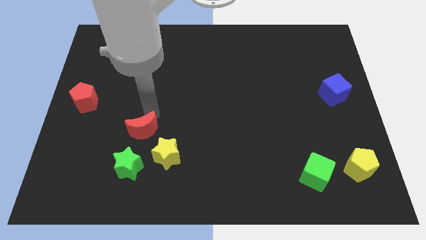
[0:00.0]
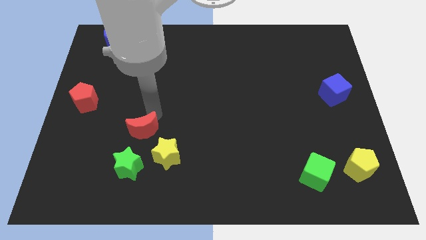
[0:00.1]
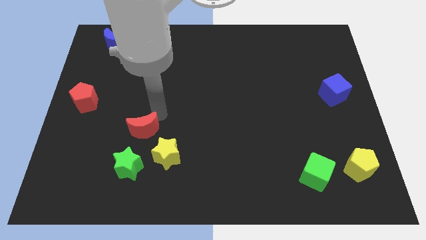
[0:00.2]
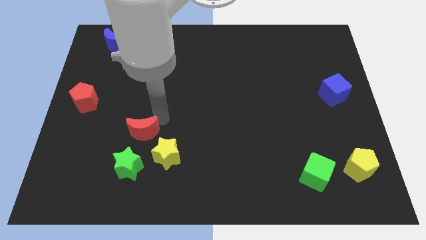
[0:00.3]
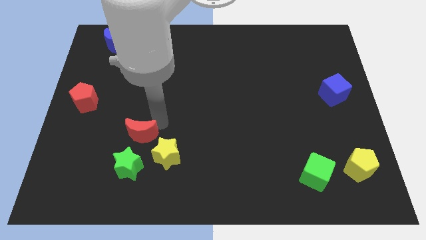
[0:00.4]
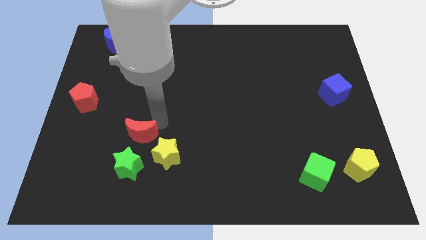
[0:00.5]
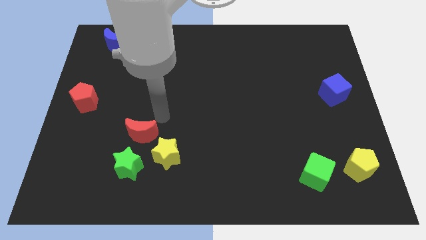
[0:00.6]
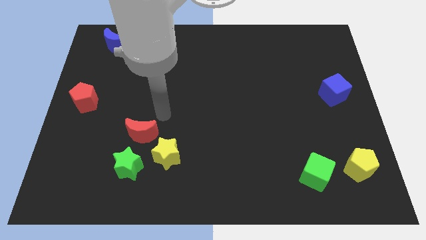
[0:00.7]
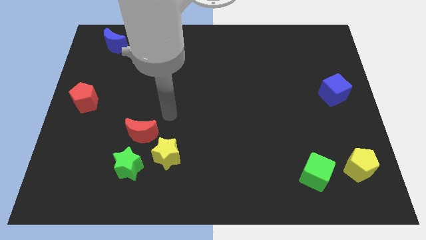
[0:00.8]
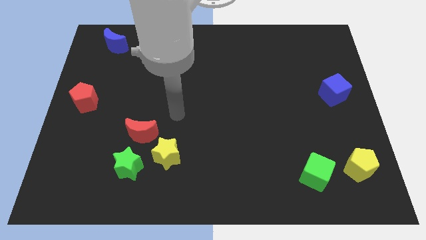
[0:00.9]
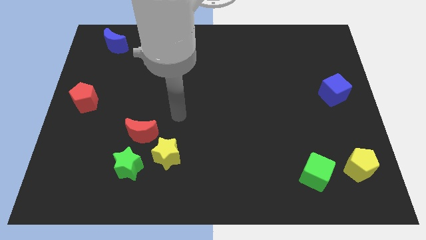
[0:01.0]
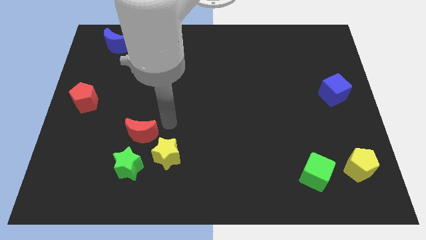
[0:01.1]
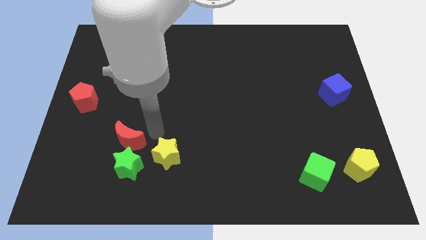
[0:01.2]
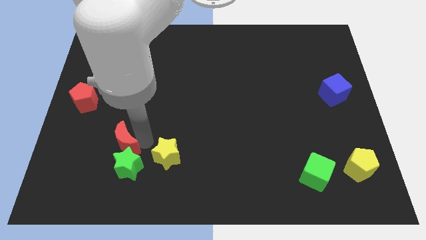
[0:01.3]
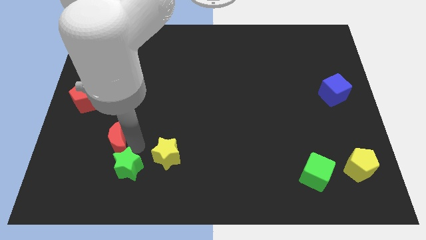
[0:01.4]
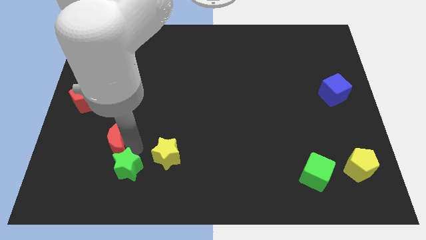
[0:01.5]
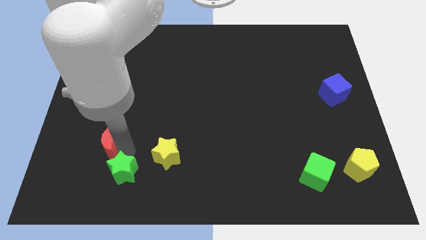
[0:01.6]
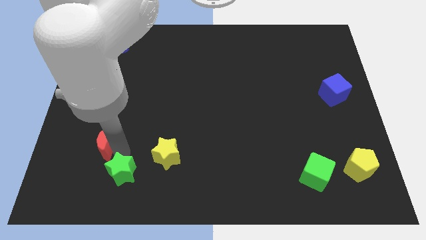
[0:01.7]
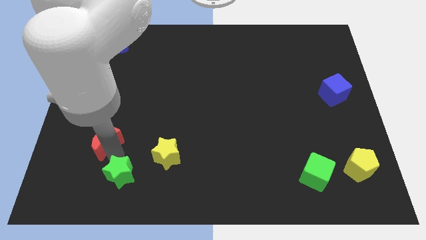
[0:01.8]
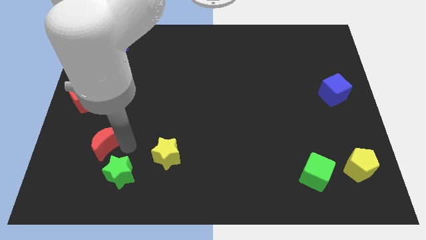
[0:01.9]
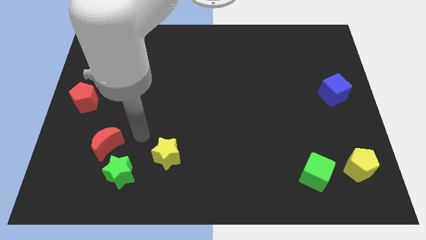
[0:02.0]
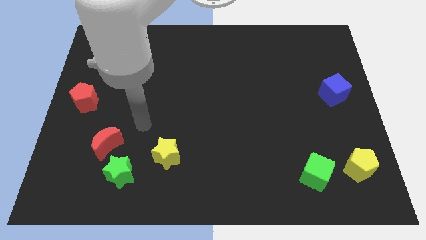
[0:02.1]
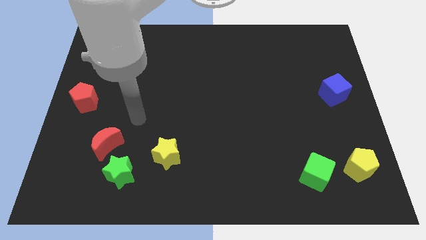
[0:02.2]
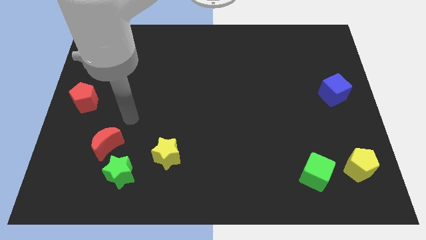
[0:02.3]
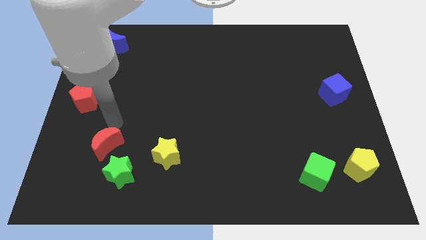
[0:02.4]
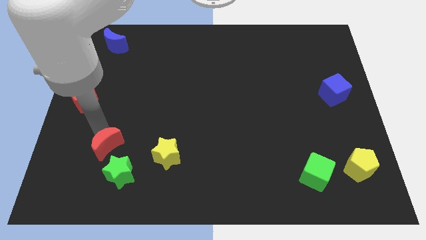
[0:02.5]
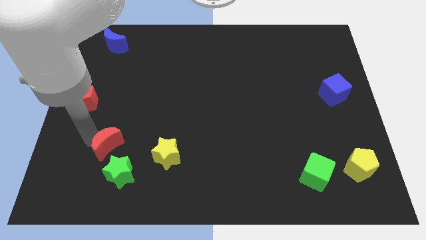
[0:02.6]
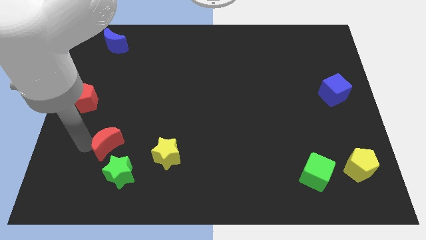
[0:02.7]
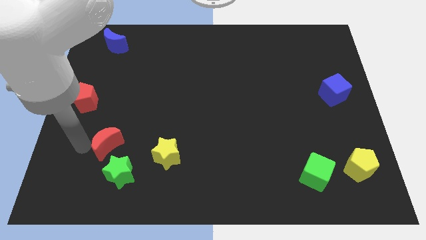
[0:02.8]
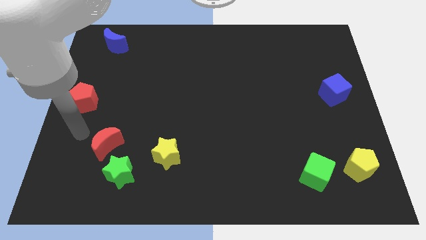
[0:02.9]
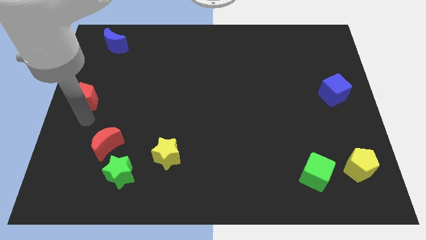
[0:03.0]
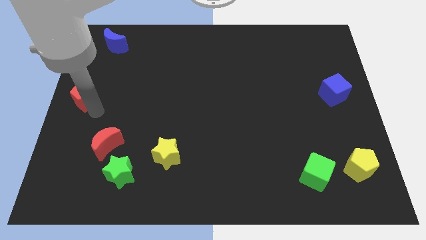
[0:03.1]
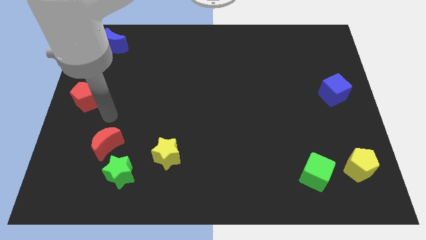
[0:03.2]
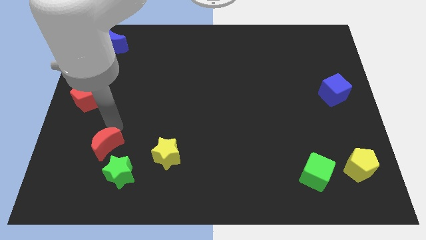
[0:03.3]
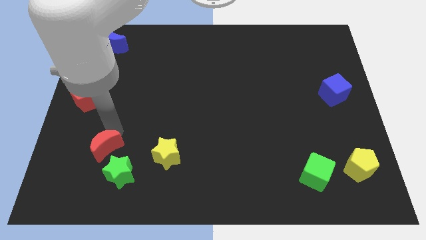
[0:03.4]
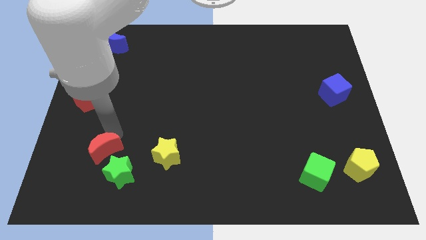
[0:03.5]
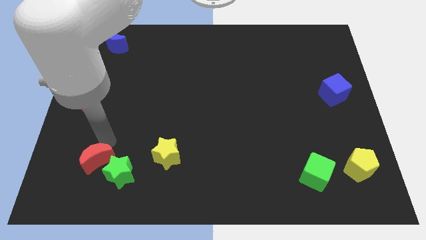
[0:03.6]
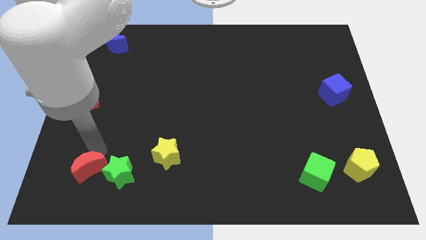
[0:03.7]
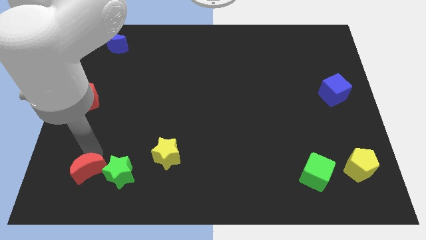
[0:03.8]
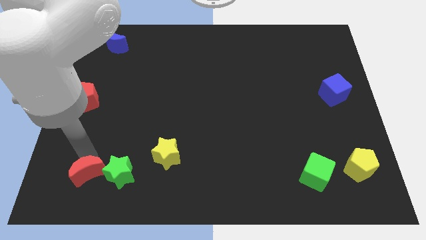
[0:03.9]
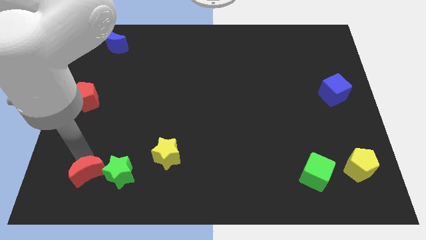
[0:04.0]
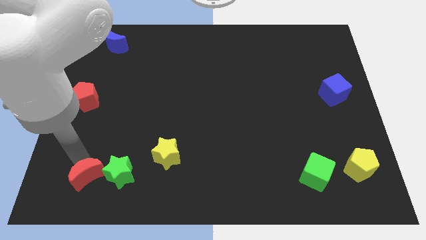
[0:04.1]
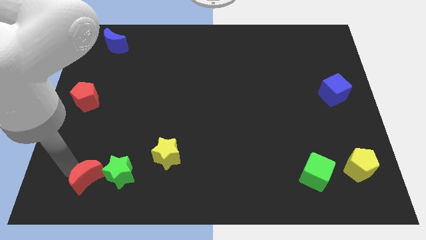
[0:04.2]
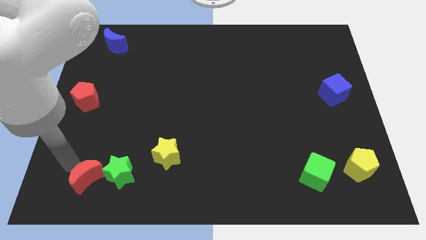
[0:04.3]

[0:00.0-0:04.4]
move the red crescent slightly to bottom of green star

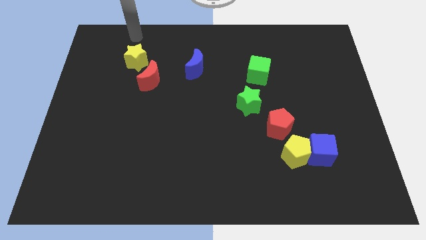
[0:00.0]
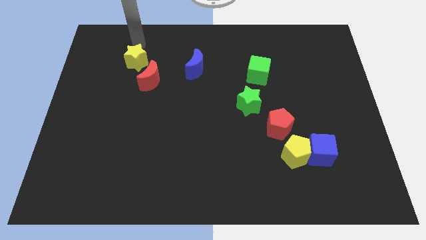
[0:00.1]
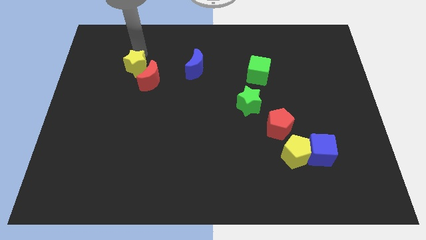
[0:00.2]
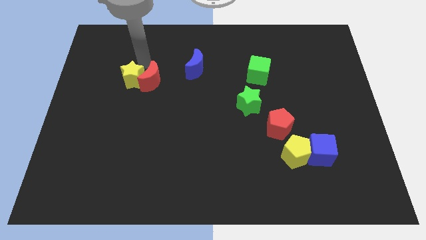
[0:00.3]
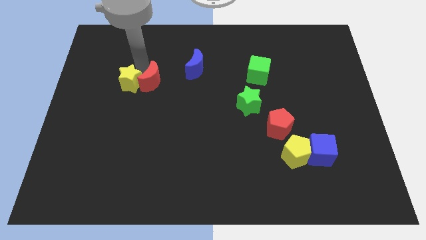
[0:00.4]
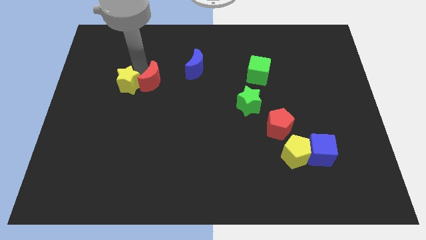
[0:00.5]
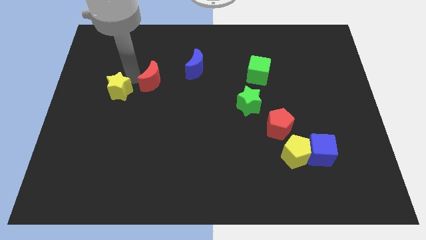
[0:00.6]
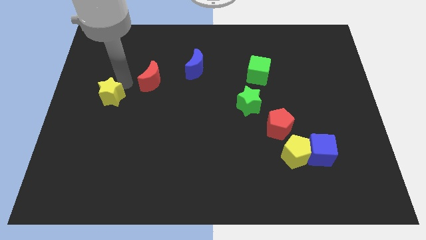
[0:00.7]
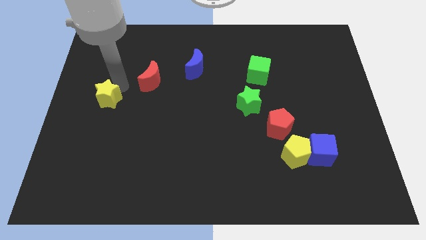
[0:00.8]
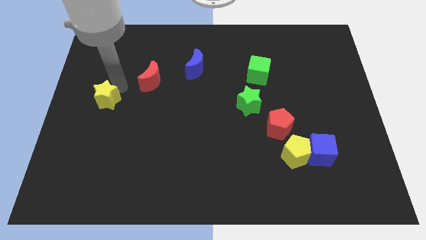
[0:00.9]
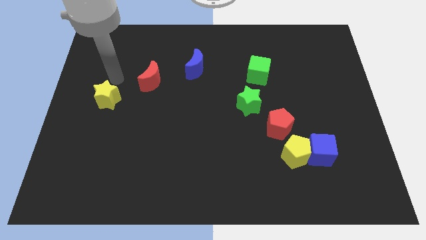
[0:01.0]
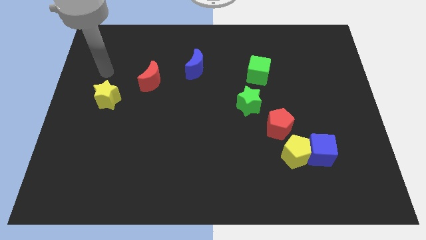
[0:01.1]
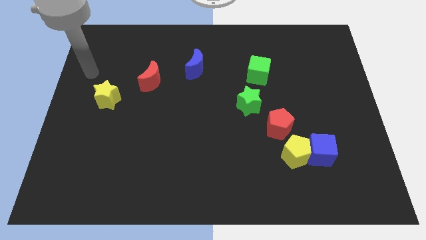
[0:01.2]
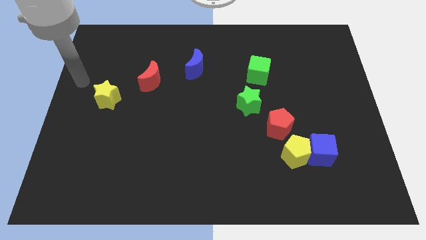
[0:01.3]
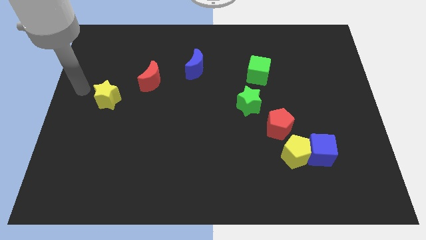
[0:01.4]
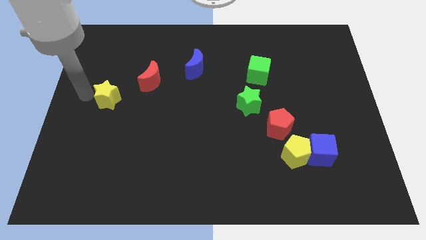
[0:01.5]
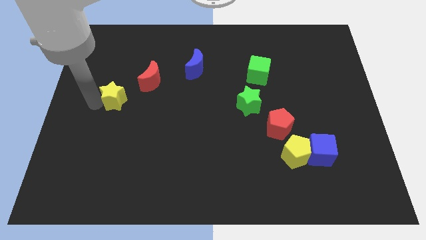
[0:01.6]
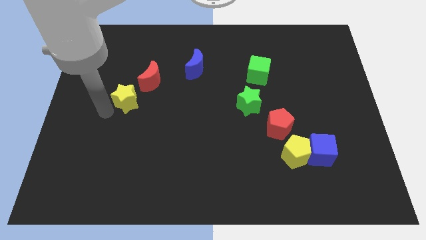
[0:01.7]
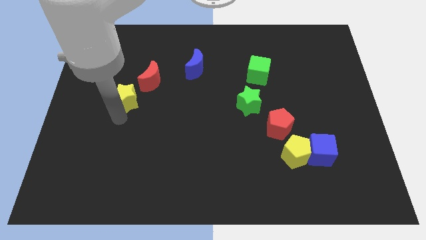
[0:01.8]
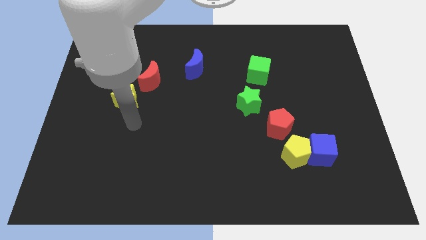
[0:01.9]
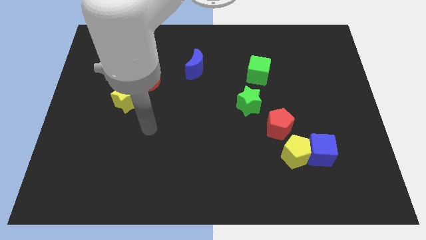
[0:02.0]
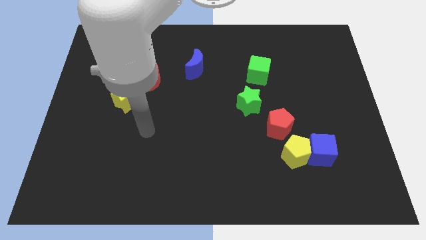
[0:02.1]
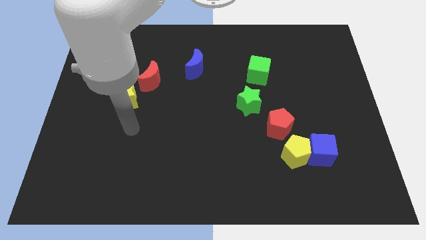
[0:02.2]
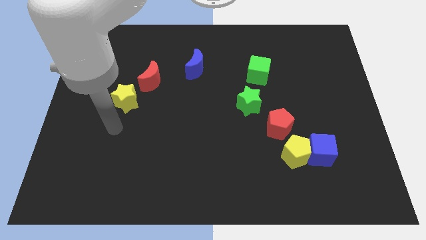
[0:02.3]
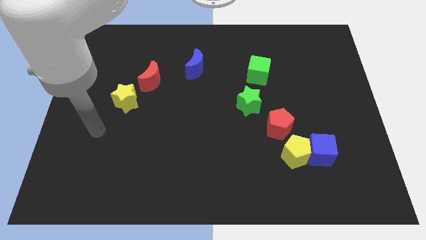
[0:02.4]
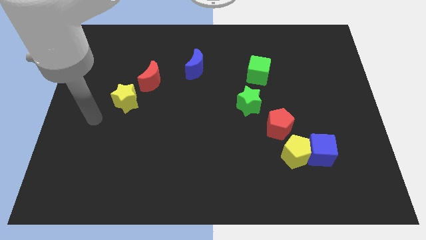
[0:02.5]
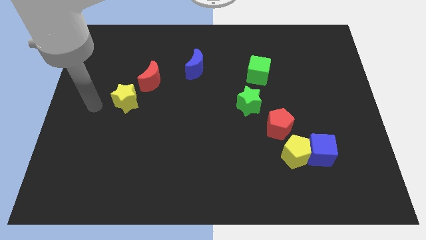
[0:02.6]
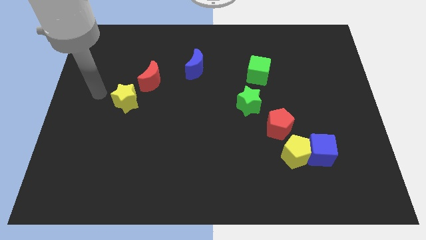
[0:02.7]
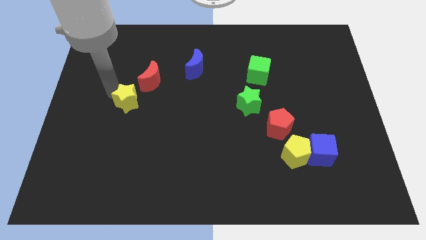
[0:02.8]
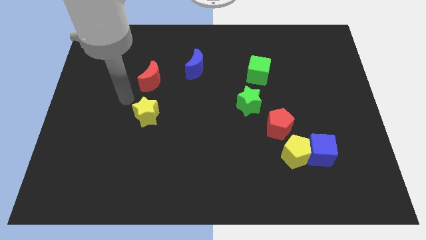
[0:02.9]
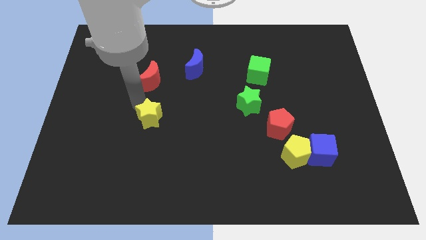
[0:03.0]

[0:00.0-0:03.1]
place the yellow star on the bottom of red moon

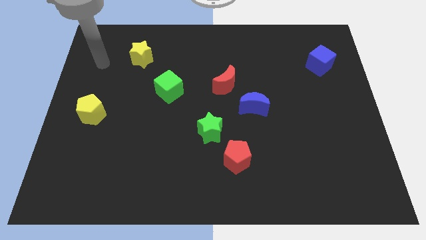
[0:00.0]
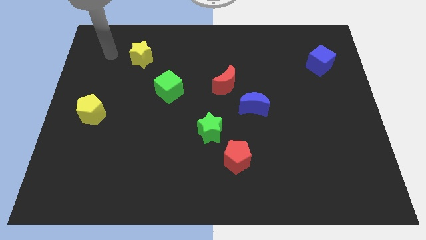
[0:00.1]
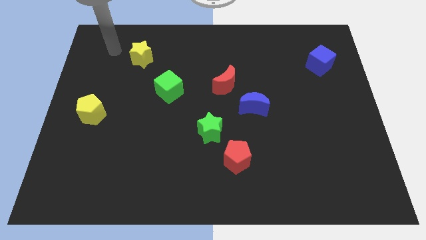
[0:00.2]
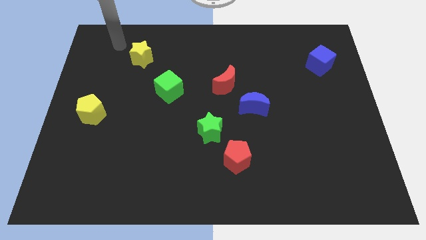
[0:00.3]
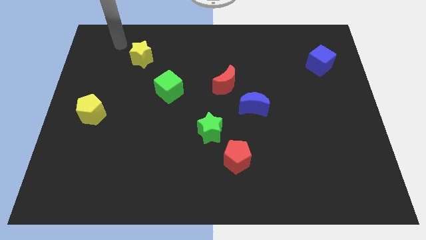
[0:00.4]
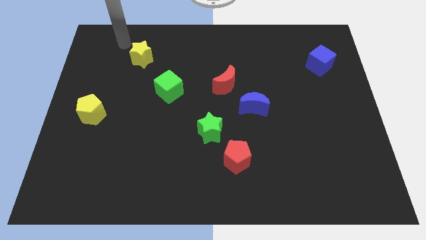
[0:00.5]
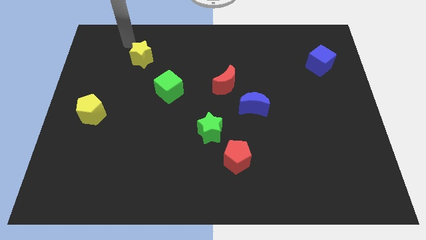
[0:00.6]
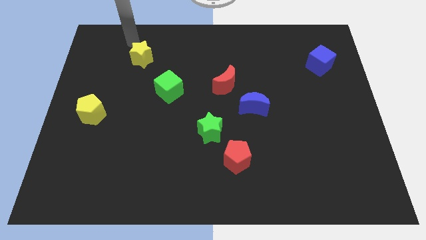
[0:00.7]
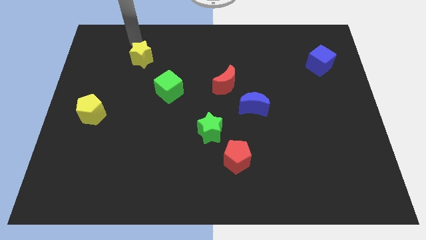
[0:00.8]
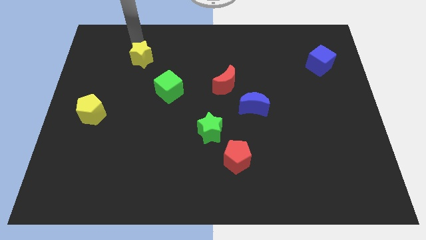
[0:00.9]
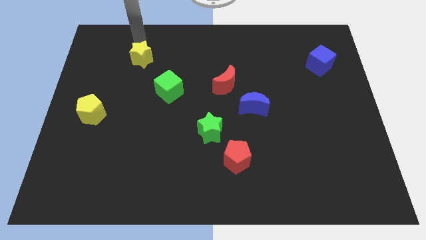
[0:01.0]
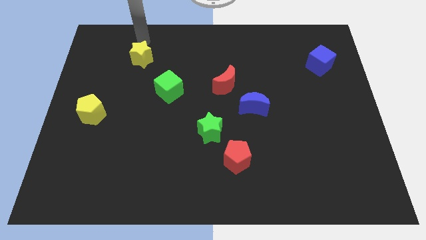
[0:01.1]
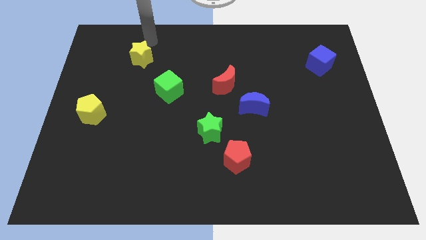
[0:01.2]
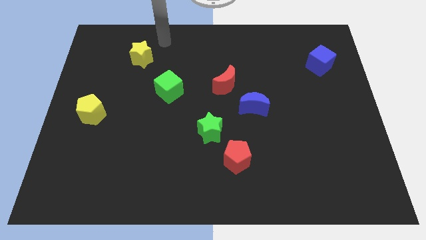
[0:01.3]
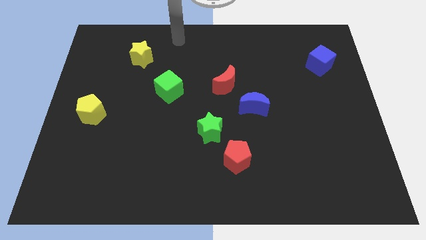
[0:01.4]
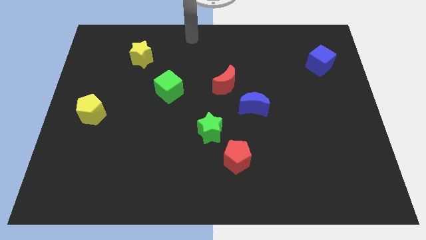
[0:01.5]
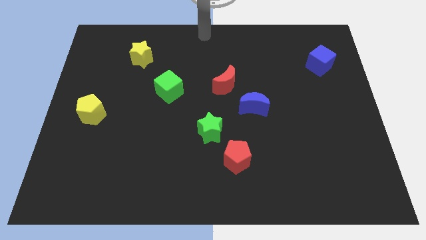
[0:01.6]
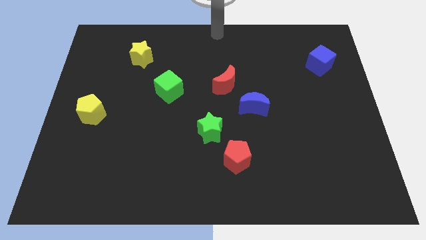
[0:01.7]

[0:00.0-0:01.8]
place your arm to the top center of the board
